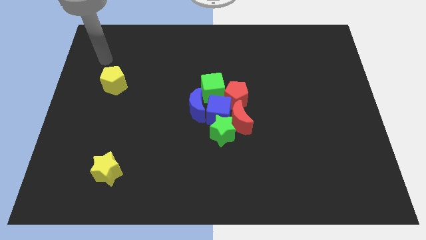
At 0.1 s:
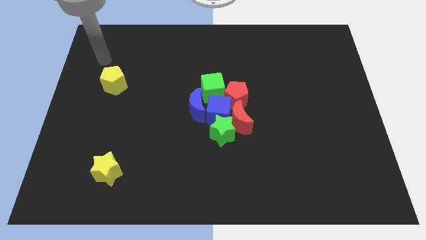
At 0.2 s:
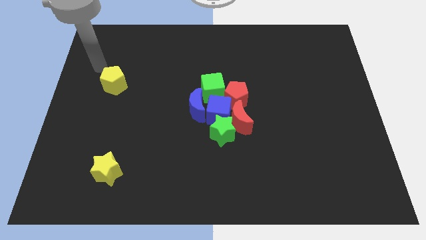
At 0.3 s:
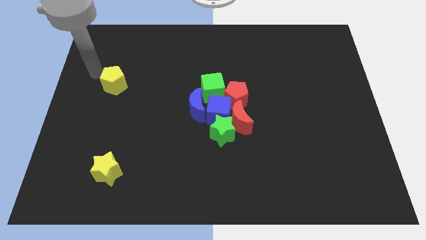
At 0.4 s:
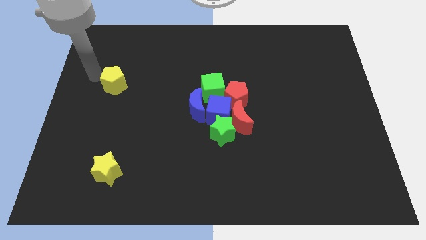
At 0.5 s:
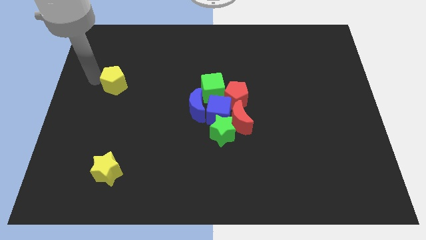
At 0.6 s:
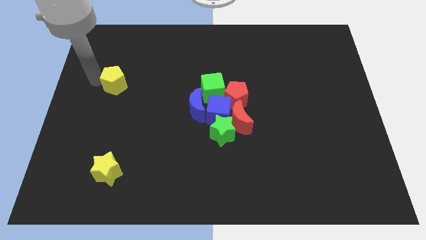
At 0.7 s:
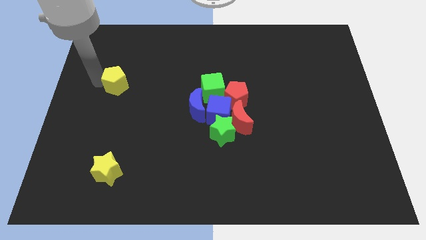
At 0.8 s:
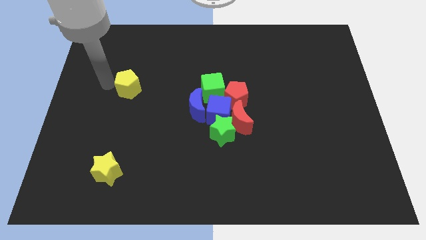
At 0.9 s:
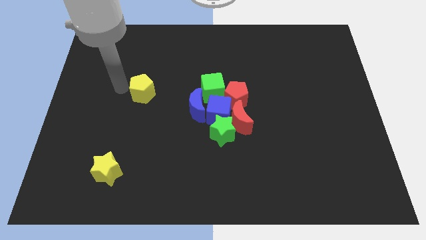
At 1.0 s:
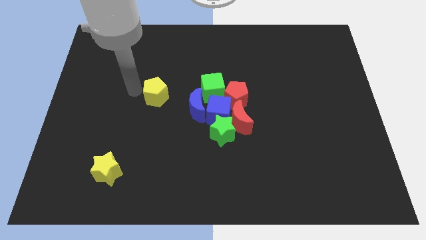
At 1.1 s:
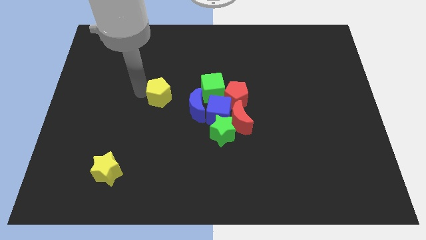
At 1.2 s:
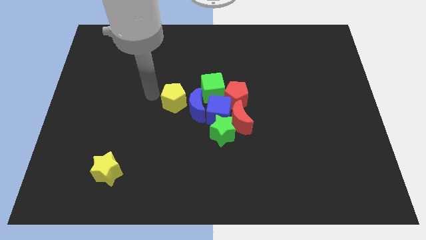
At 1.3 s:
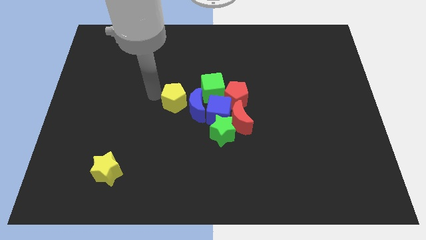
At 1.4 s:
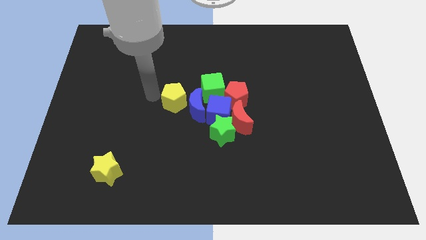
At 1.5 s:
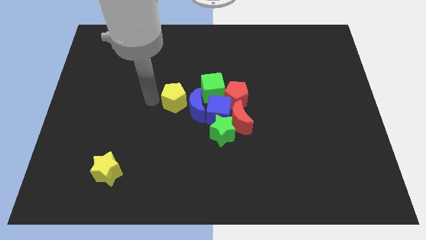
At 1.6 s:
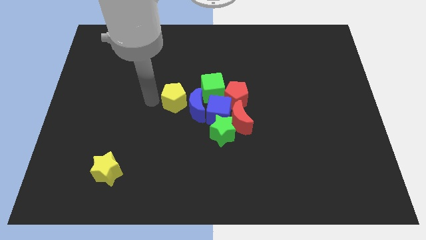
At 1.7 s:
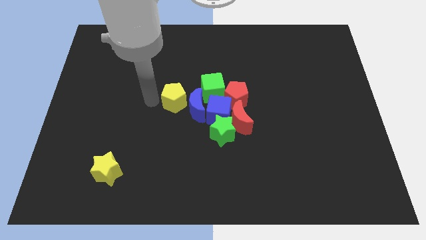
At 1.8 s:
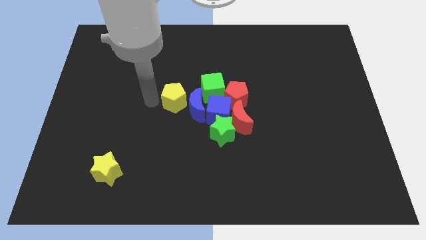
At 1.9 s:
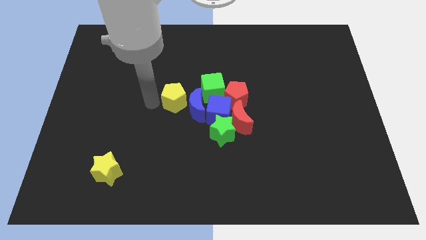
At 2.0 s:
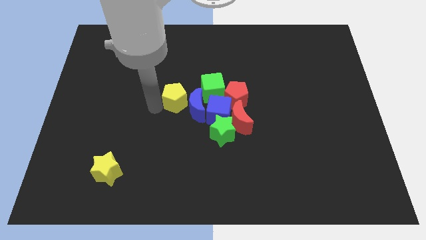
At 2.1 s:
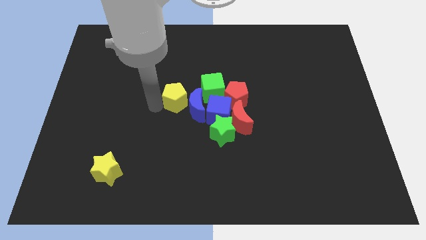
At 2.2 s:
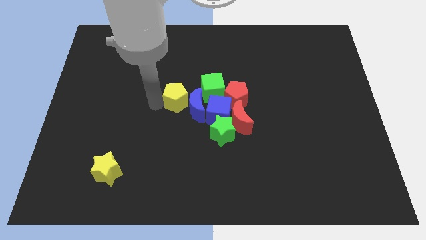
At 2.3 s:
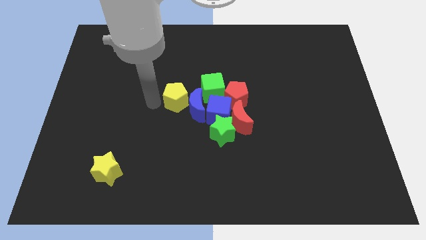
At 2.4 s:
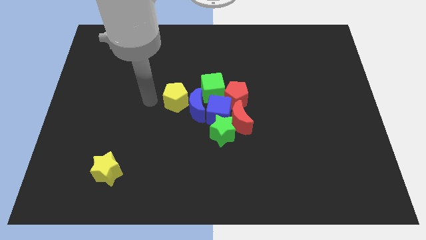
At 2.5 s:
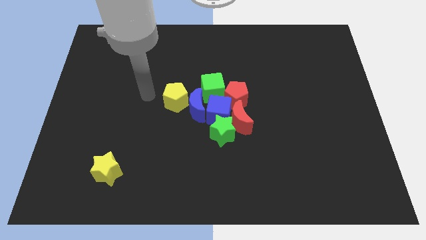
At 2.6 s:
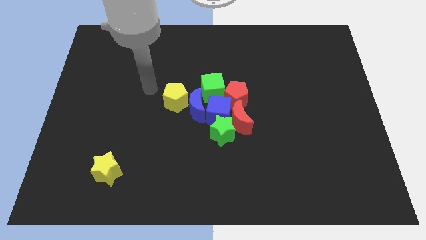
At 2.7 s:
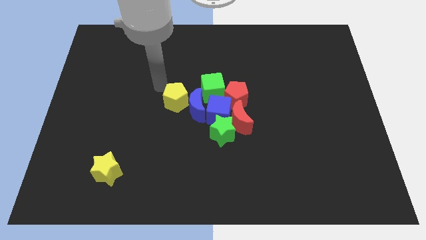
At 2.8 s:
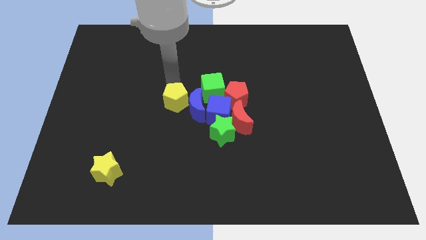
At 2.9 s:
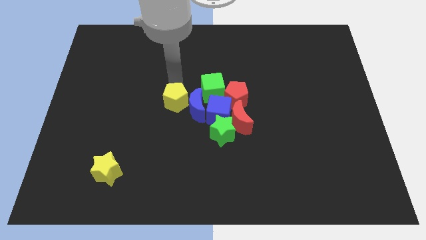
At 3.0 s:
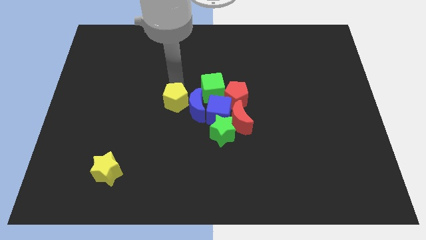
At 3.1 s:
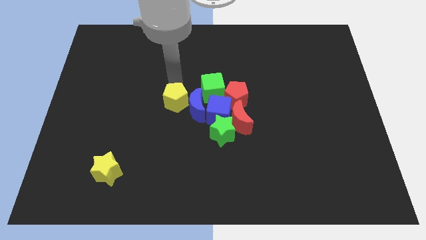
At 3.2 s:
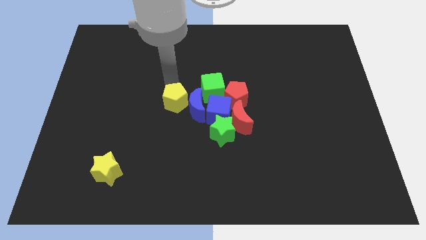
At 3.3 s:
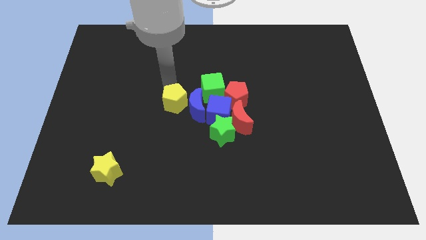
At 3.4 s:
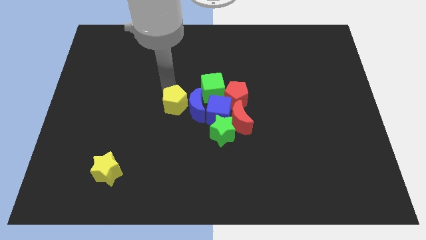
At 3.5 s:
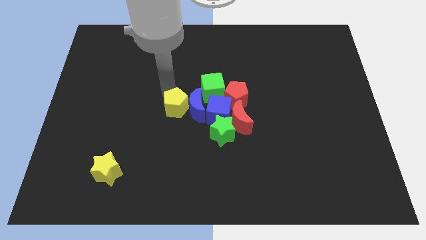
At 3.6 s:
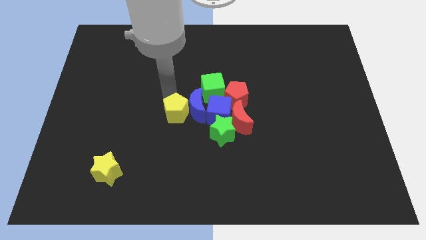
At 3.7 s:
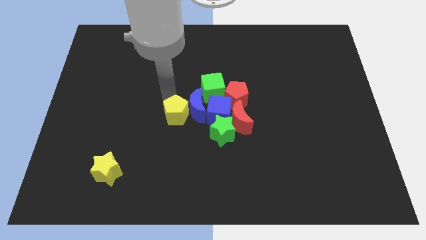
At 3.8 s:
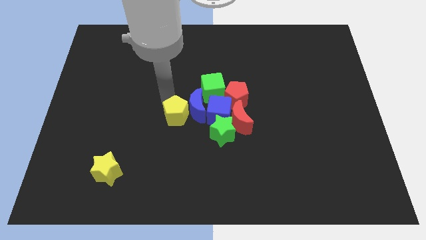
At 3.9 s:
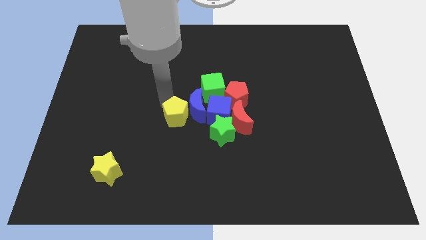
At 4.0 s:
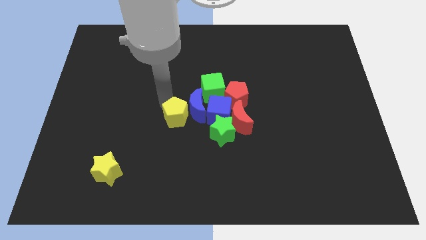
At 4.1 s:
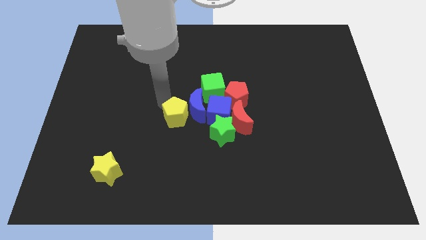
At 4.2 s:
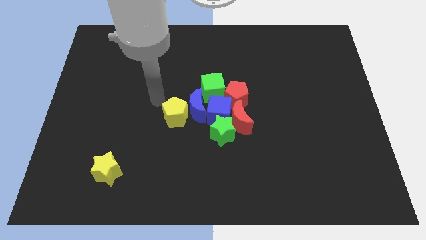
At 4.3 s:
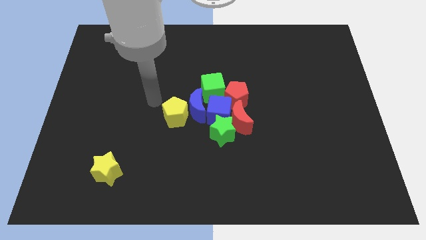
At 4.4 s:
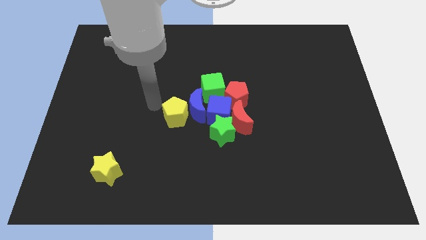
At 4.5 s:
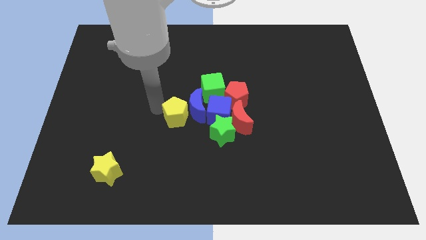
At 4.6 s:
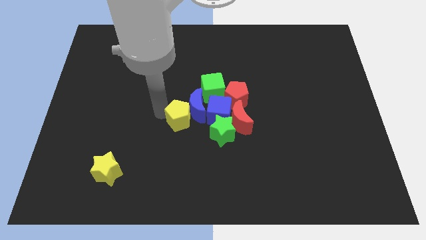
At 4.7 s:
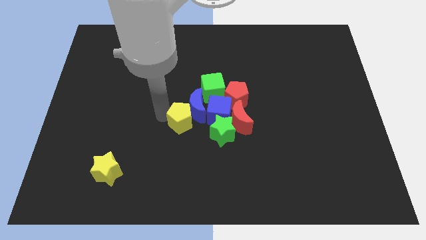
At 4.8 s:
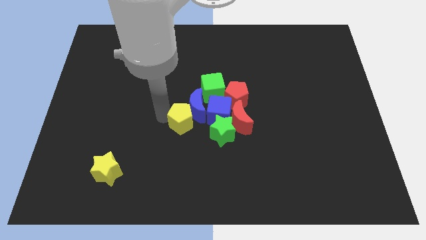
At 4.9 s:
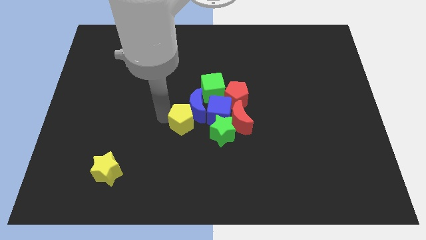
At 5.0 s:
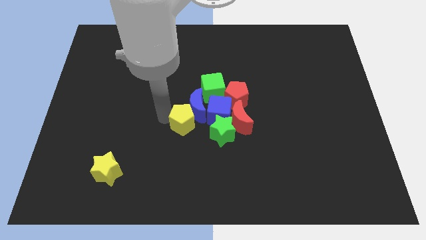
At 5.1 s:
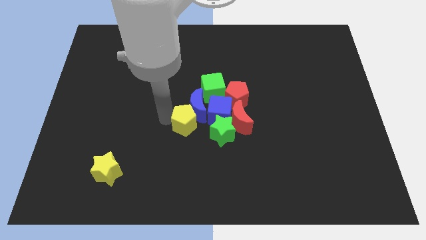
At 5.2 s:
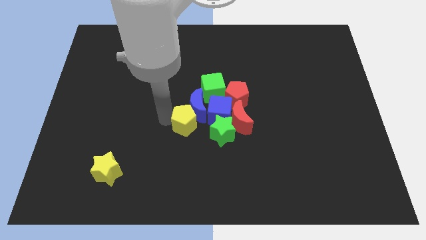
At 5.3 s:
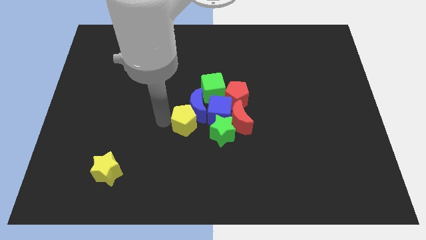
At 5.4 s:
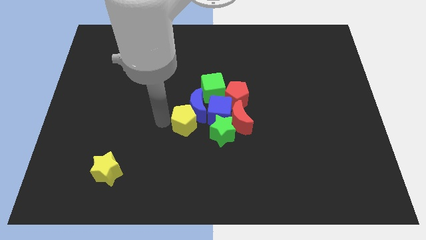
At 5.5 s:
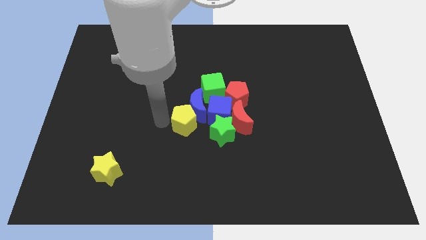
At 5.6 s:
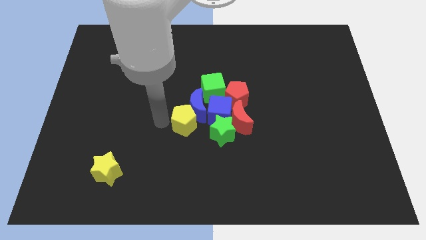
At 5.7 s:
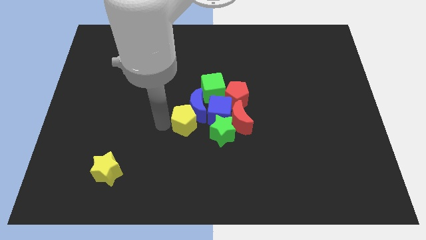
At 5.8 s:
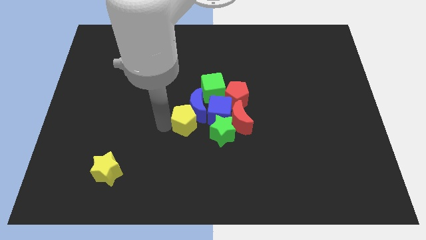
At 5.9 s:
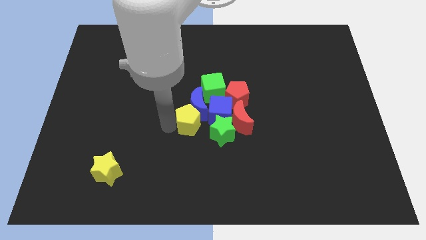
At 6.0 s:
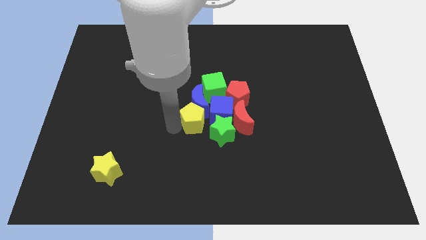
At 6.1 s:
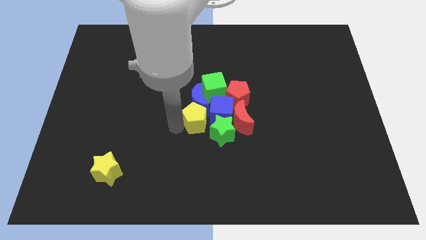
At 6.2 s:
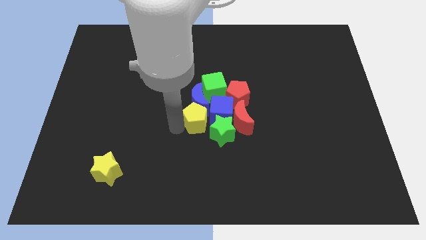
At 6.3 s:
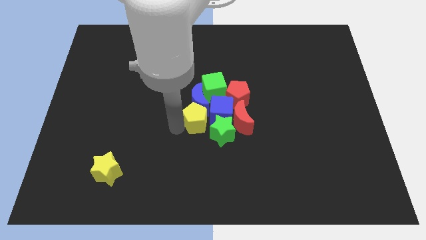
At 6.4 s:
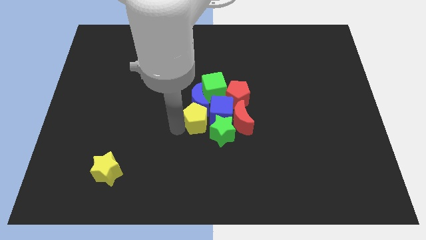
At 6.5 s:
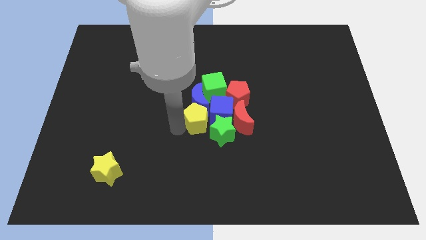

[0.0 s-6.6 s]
place the yellow pentagon below the blue moon

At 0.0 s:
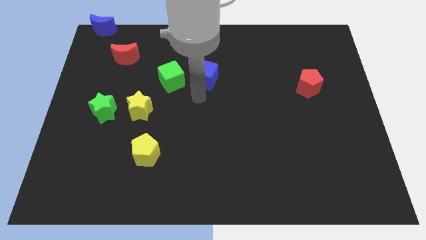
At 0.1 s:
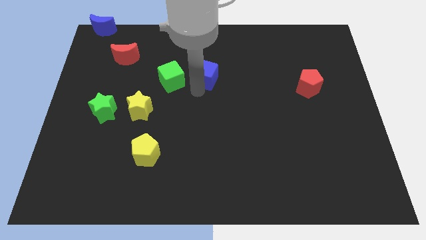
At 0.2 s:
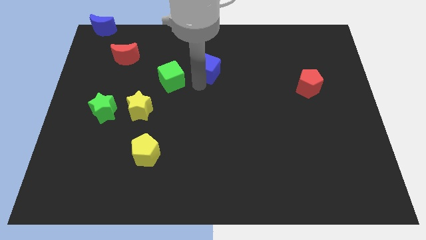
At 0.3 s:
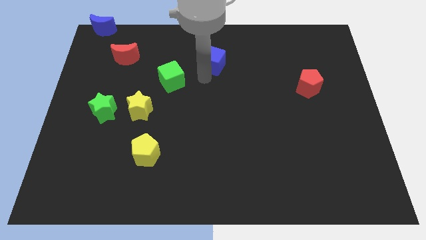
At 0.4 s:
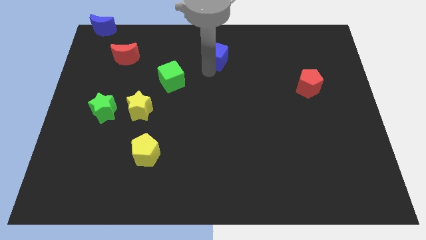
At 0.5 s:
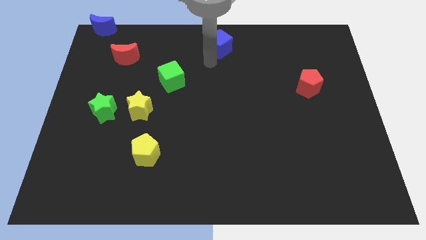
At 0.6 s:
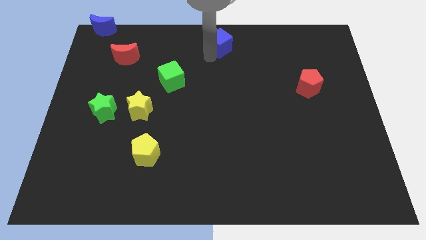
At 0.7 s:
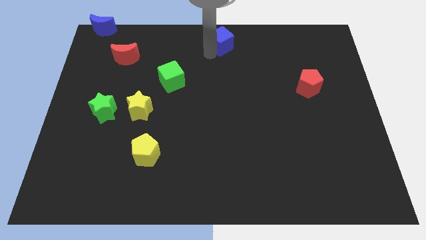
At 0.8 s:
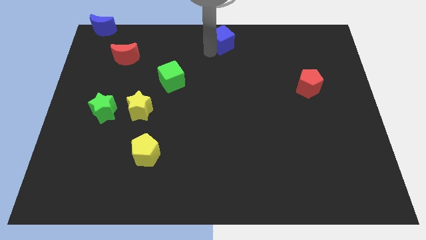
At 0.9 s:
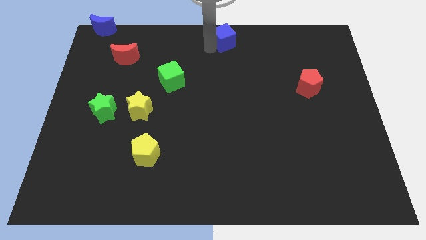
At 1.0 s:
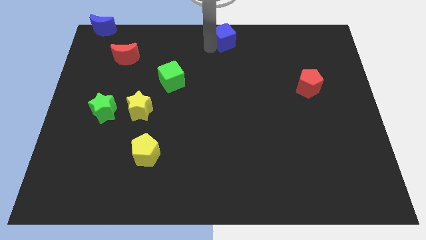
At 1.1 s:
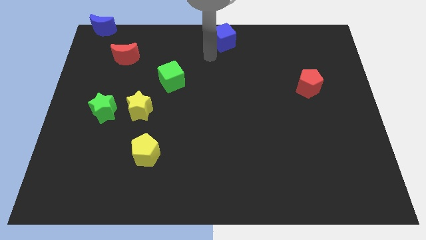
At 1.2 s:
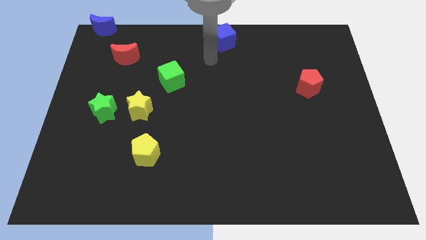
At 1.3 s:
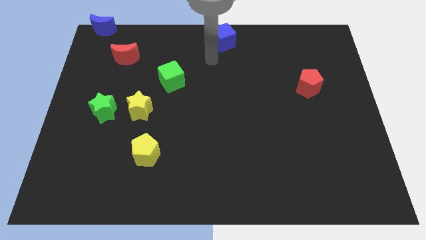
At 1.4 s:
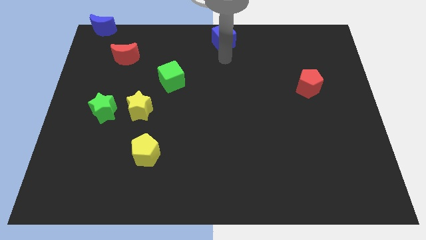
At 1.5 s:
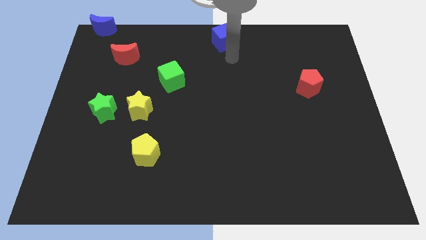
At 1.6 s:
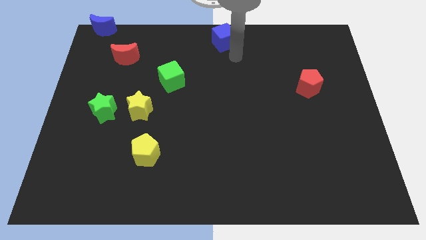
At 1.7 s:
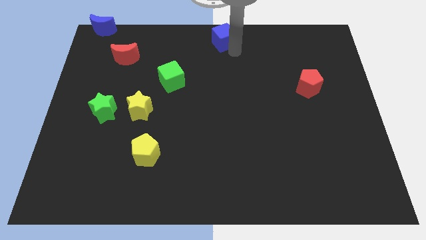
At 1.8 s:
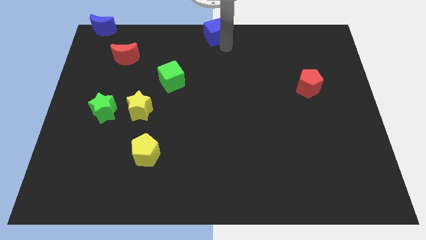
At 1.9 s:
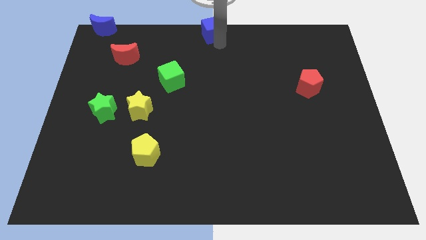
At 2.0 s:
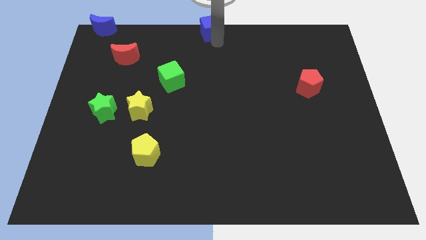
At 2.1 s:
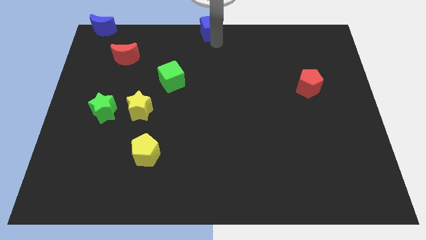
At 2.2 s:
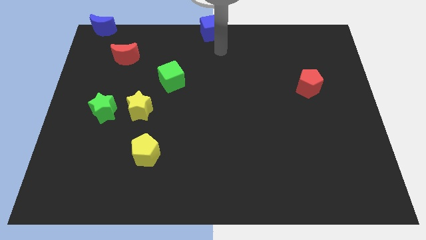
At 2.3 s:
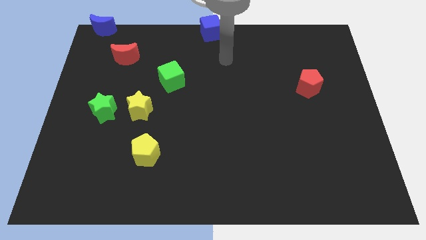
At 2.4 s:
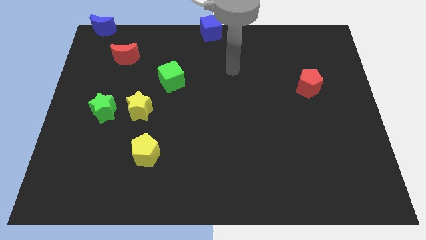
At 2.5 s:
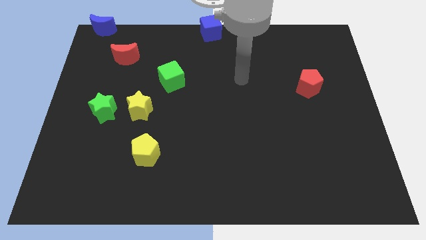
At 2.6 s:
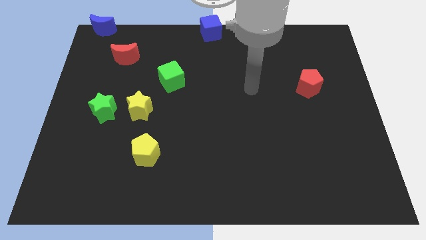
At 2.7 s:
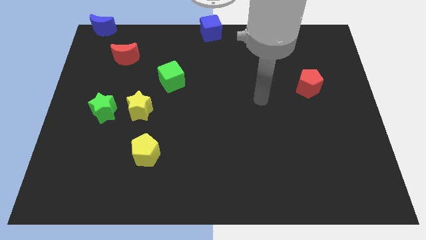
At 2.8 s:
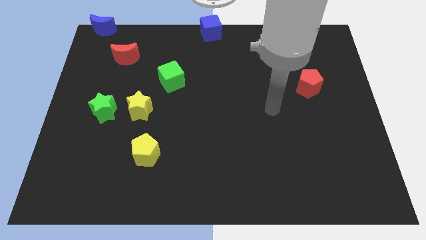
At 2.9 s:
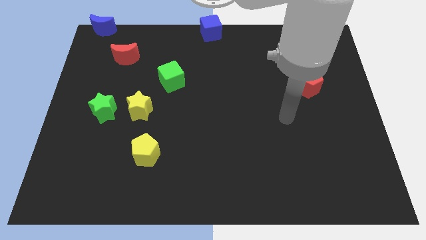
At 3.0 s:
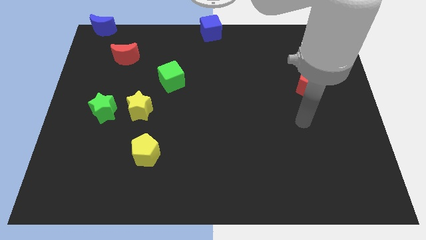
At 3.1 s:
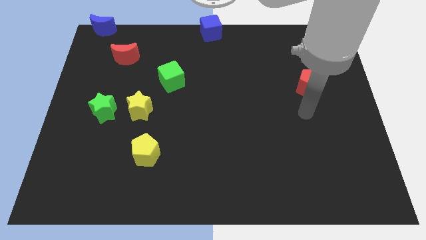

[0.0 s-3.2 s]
push the blue cube to the top center
